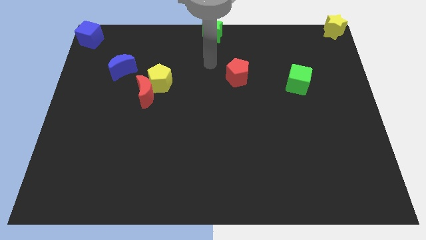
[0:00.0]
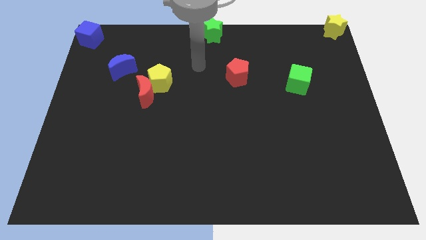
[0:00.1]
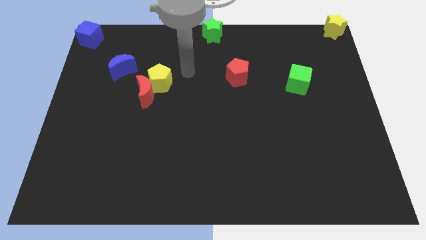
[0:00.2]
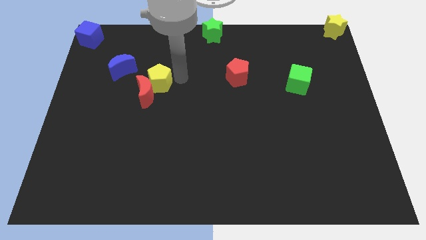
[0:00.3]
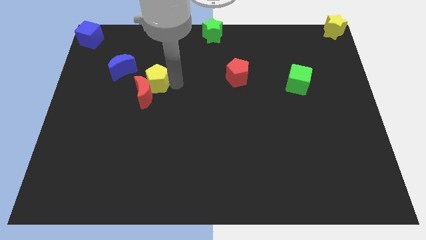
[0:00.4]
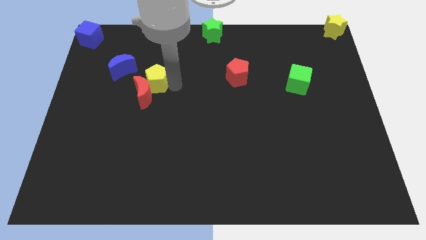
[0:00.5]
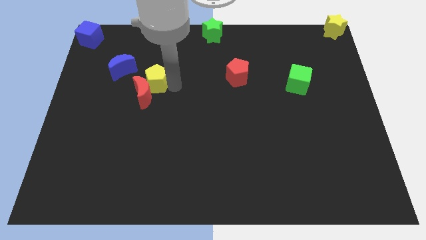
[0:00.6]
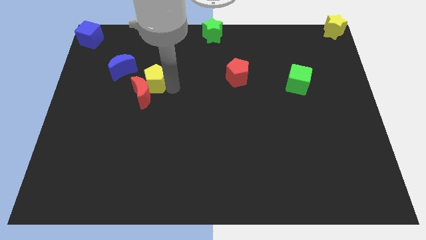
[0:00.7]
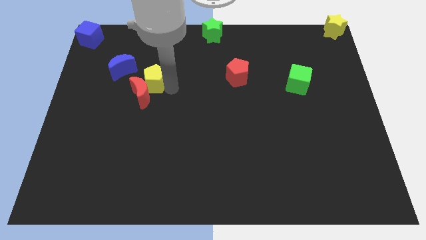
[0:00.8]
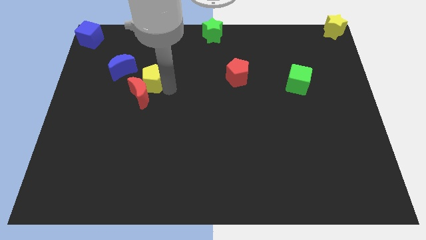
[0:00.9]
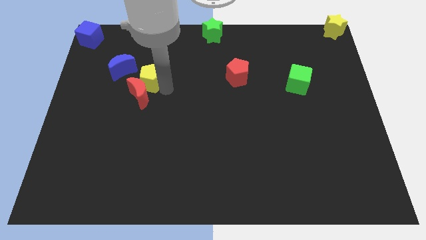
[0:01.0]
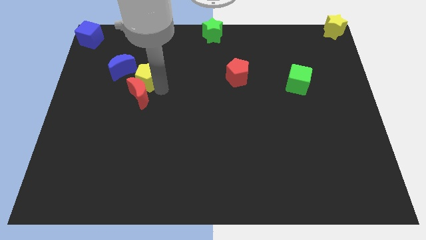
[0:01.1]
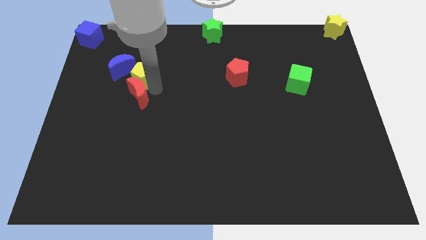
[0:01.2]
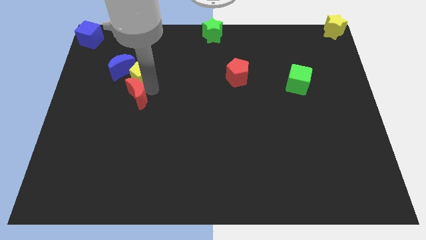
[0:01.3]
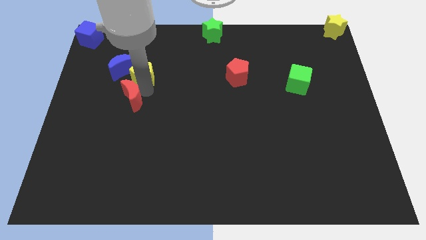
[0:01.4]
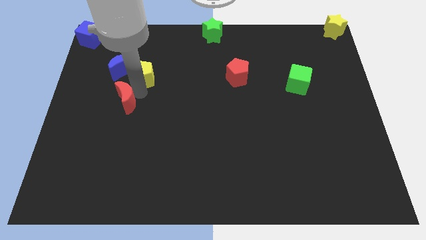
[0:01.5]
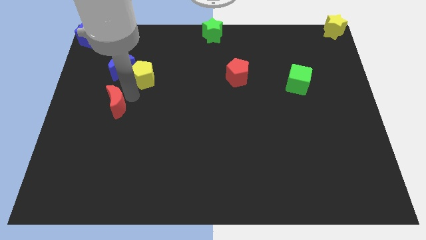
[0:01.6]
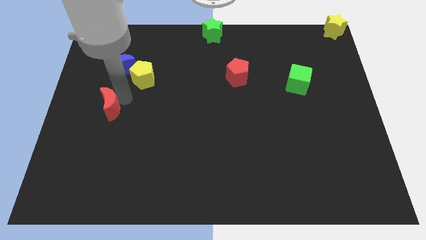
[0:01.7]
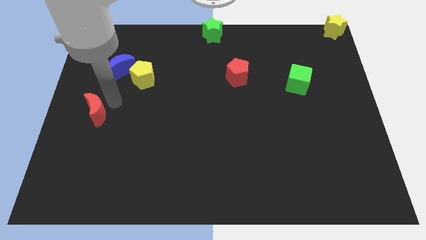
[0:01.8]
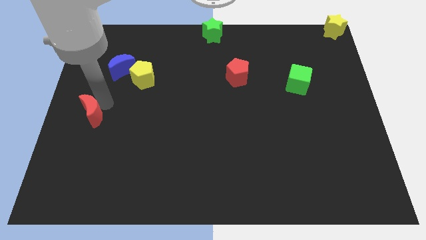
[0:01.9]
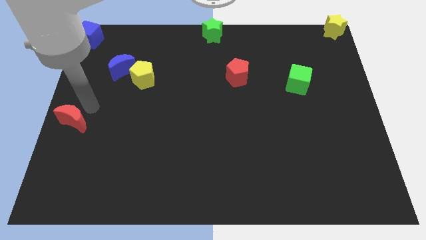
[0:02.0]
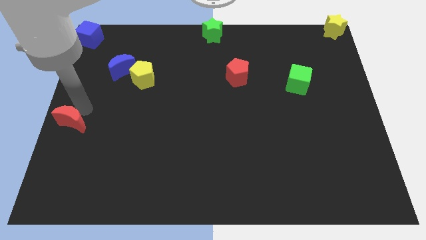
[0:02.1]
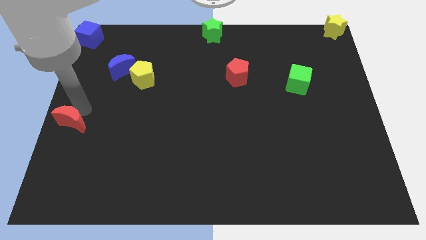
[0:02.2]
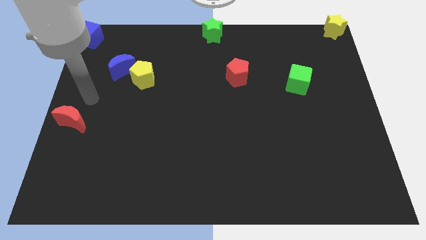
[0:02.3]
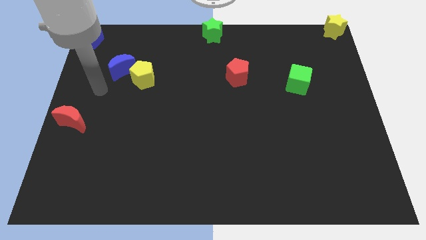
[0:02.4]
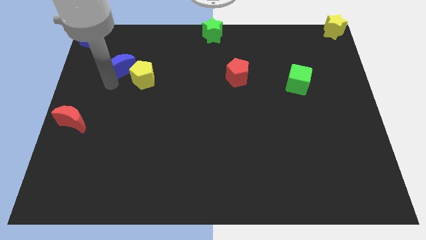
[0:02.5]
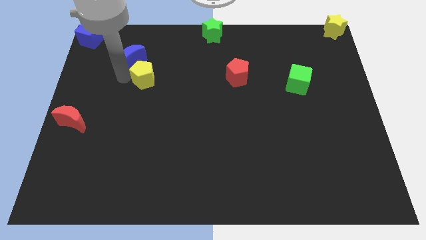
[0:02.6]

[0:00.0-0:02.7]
push the red crescent to the left center of the board

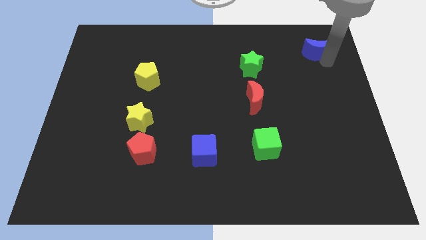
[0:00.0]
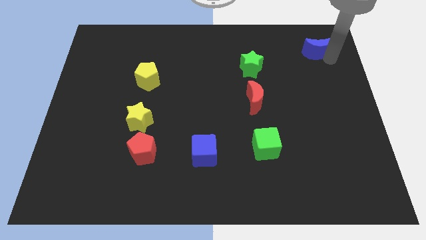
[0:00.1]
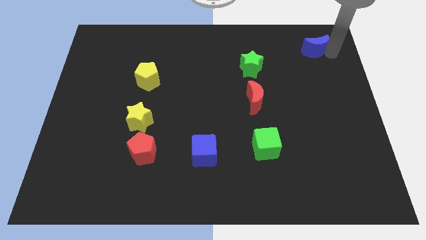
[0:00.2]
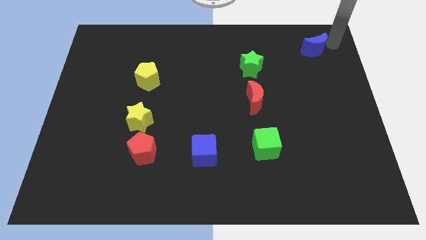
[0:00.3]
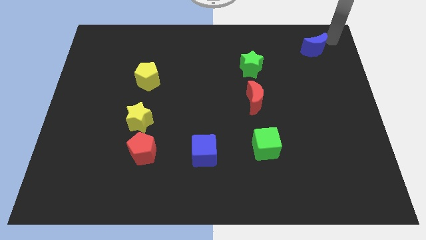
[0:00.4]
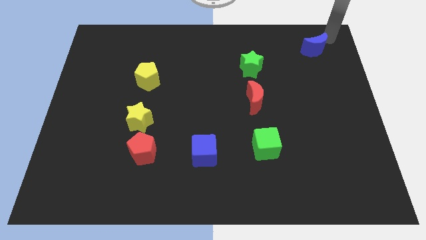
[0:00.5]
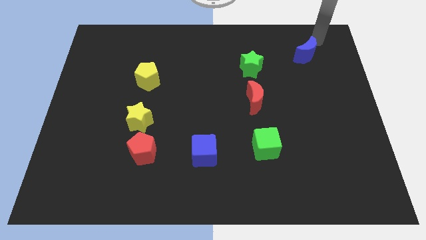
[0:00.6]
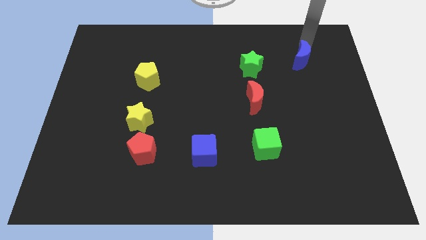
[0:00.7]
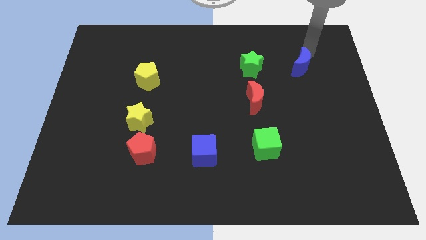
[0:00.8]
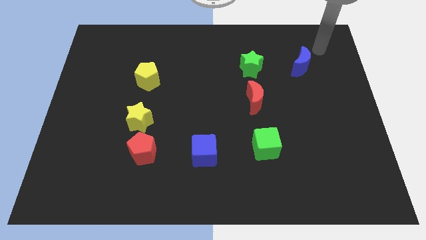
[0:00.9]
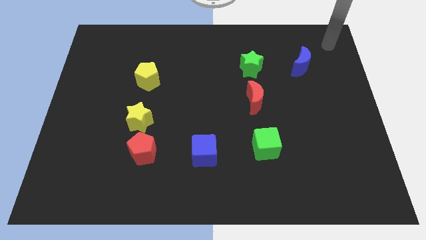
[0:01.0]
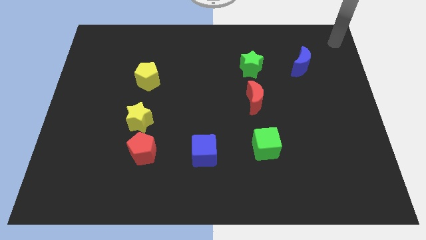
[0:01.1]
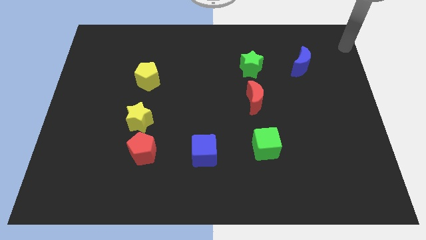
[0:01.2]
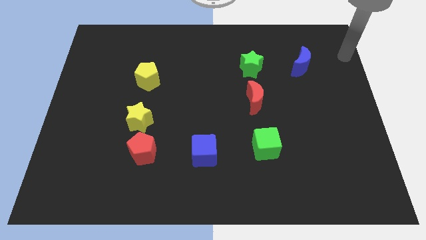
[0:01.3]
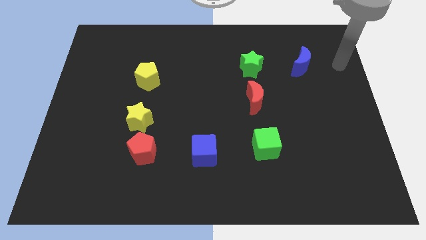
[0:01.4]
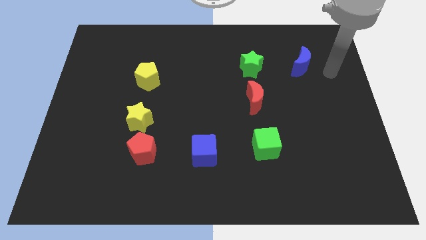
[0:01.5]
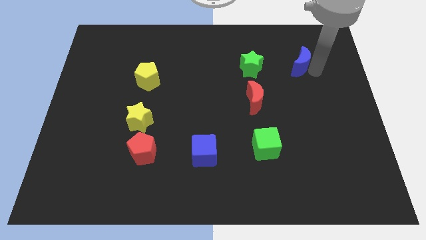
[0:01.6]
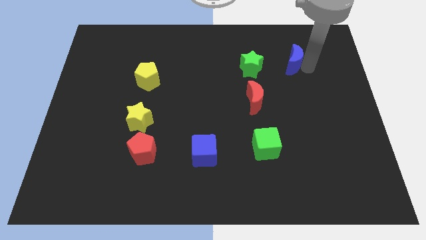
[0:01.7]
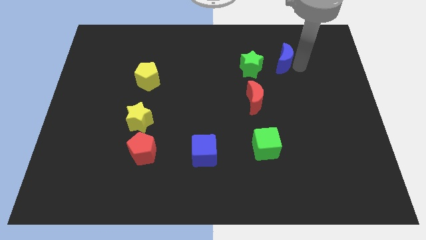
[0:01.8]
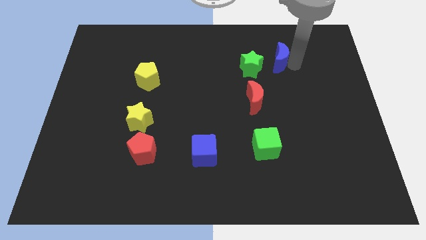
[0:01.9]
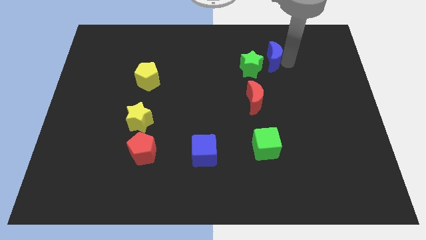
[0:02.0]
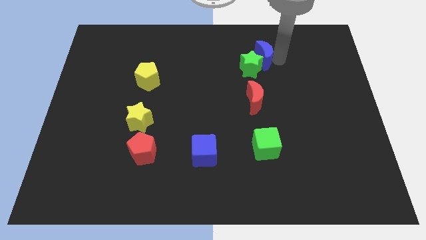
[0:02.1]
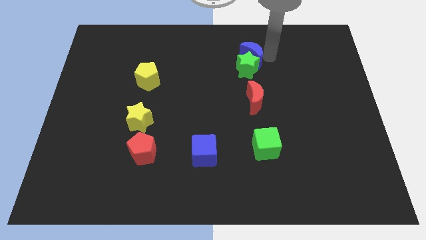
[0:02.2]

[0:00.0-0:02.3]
move the blue moon into green star

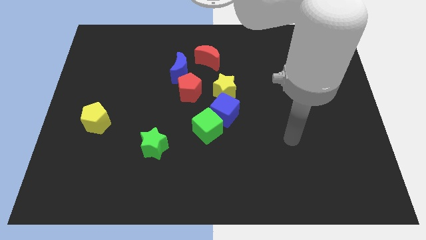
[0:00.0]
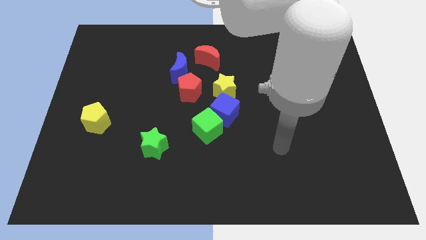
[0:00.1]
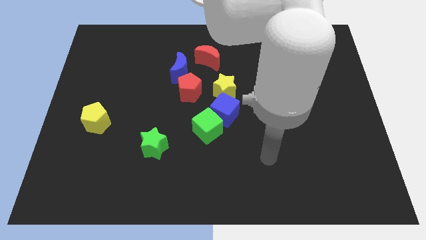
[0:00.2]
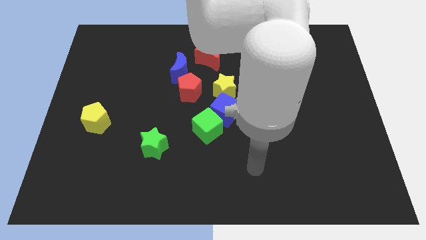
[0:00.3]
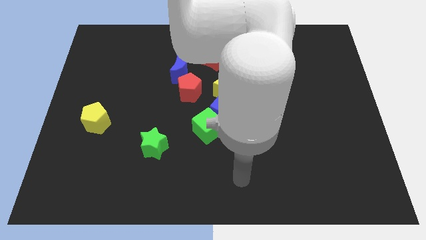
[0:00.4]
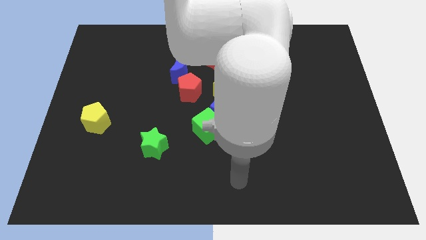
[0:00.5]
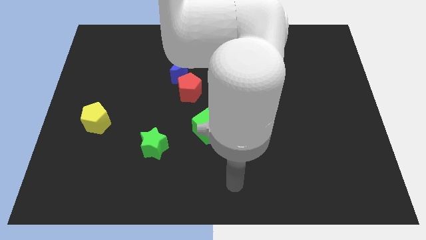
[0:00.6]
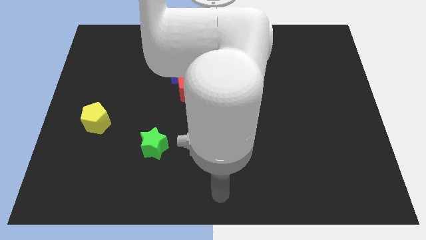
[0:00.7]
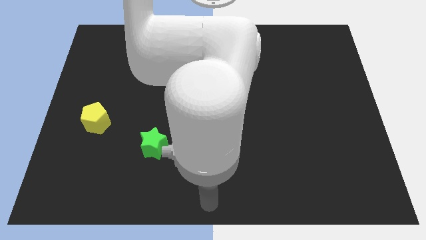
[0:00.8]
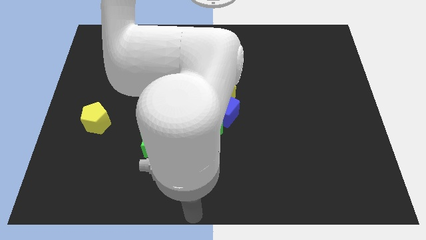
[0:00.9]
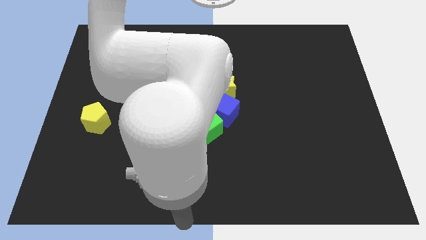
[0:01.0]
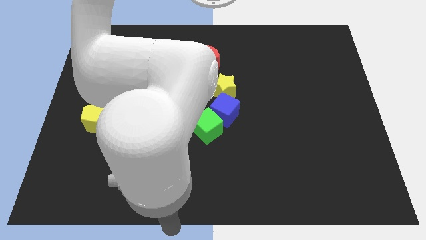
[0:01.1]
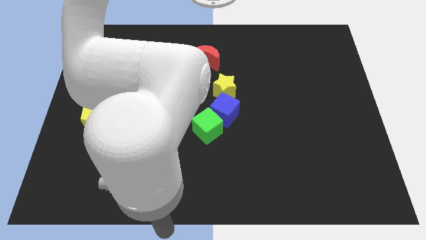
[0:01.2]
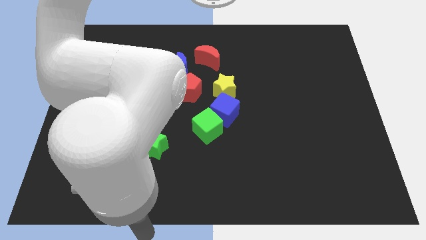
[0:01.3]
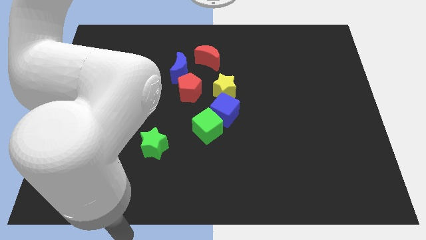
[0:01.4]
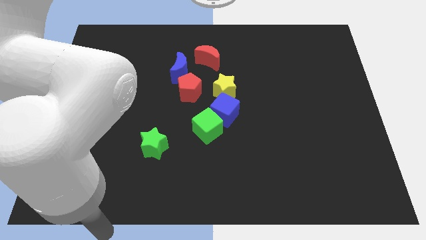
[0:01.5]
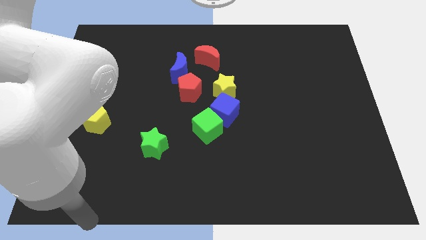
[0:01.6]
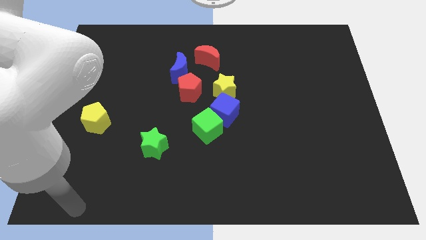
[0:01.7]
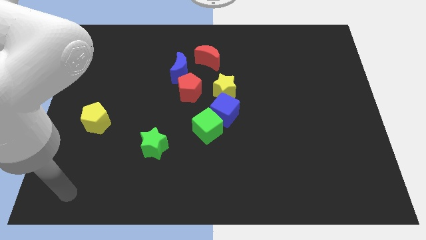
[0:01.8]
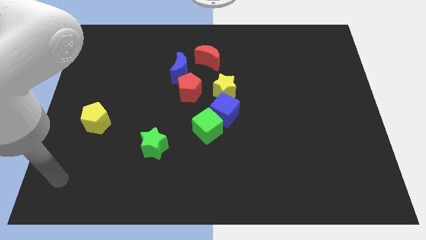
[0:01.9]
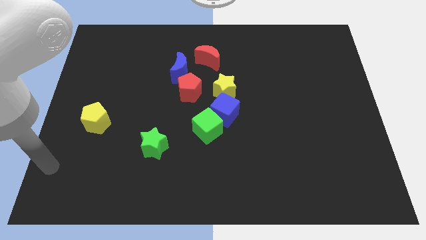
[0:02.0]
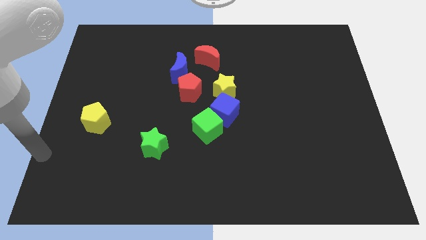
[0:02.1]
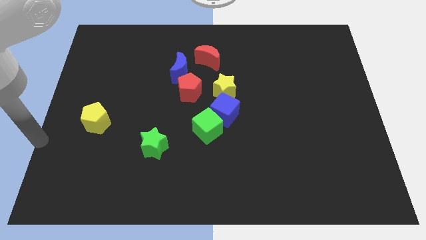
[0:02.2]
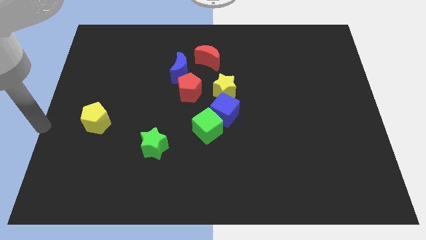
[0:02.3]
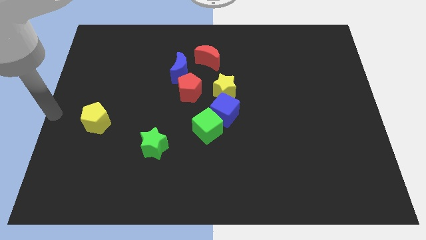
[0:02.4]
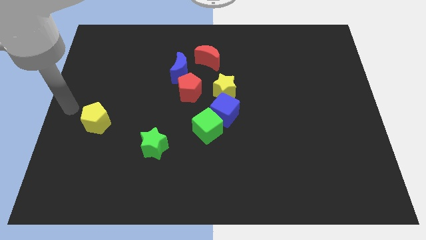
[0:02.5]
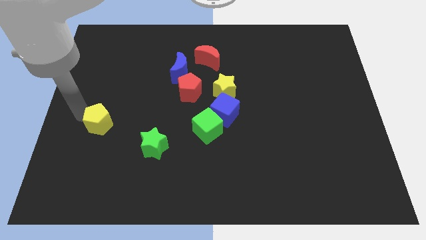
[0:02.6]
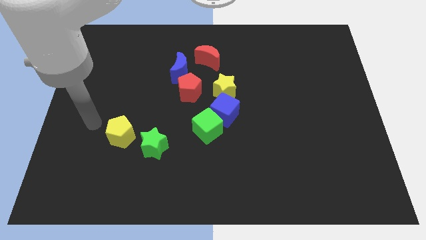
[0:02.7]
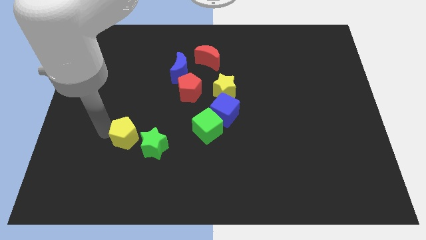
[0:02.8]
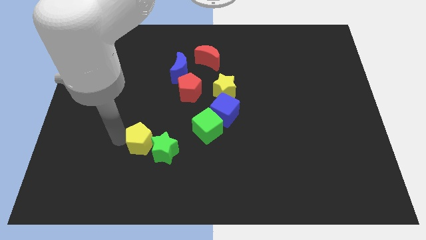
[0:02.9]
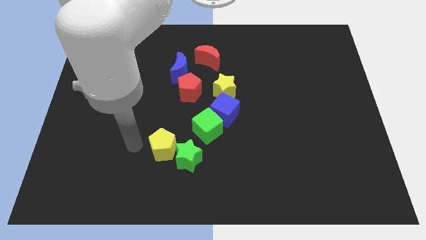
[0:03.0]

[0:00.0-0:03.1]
place the arm to the left of the yellow pentagon

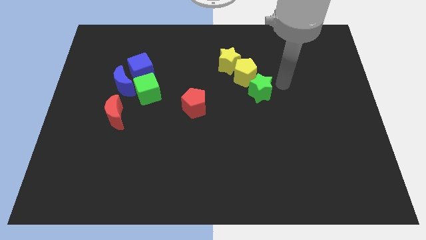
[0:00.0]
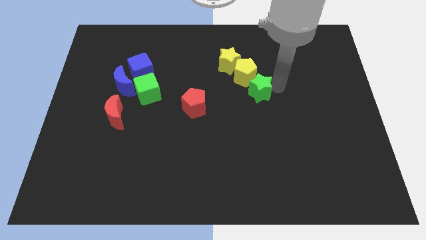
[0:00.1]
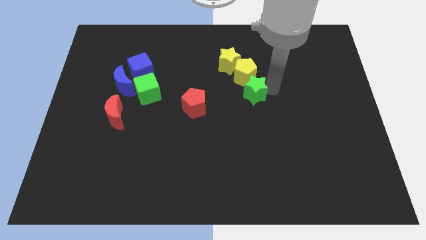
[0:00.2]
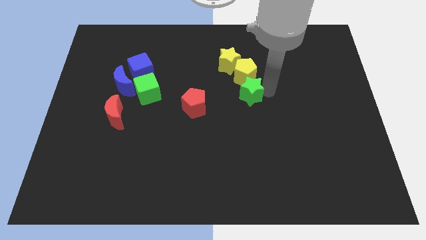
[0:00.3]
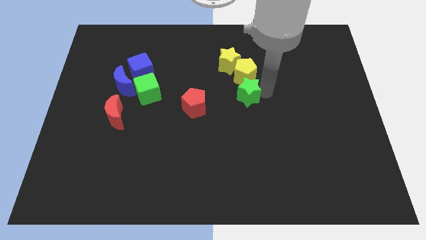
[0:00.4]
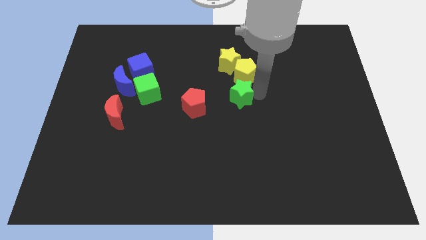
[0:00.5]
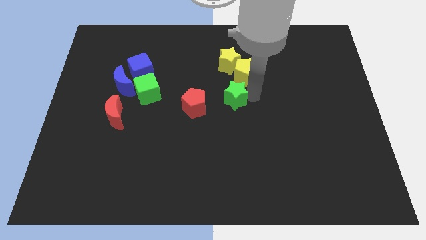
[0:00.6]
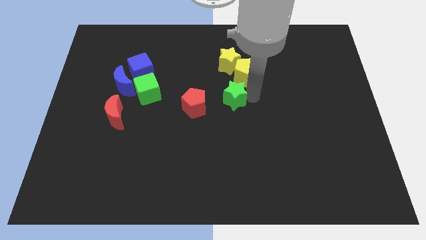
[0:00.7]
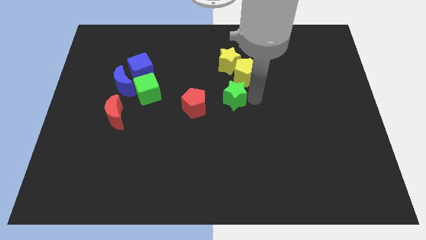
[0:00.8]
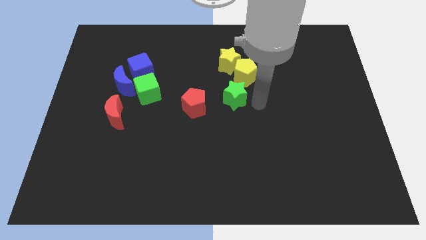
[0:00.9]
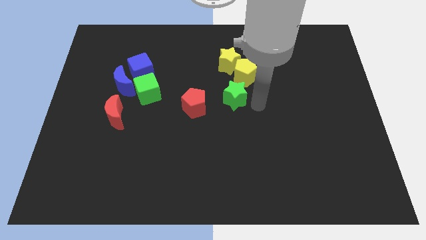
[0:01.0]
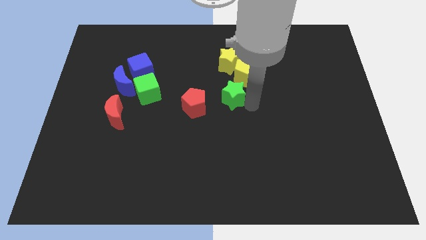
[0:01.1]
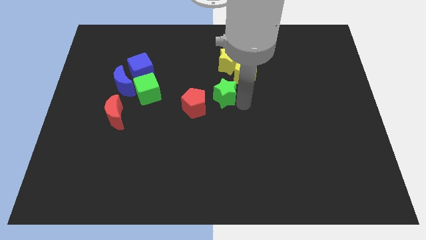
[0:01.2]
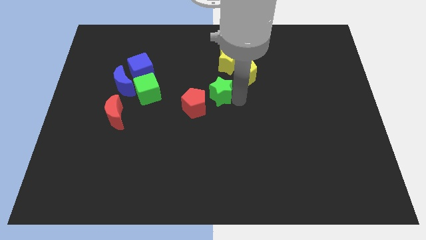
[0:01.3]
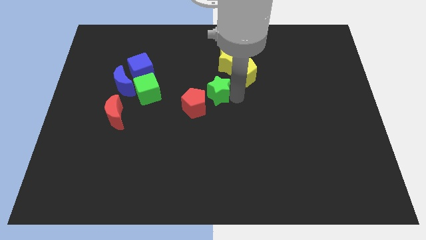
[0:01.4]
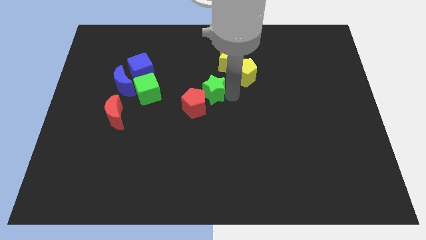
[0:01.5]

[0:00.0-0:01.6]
place the green star in between the pentagons
